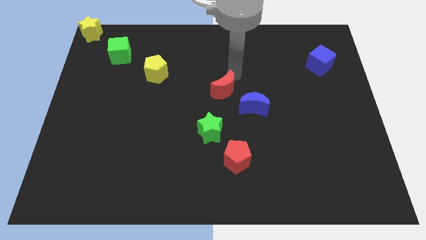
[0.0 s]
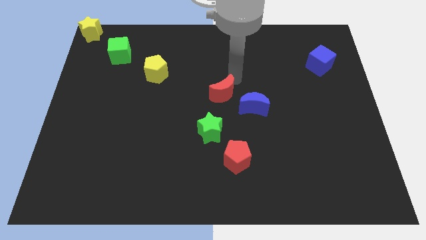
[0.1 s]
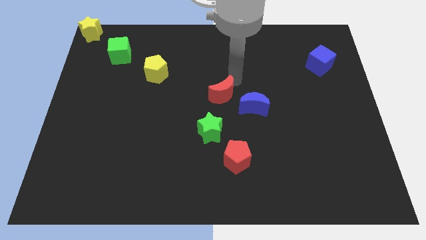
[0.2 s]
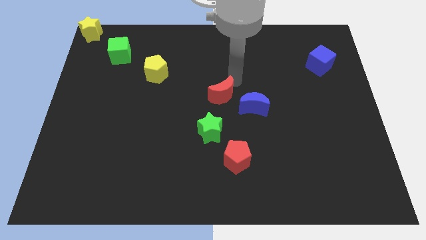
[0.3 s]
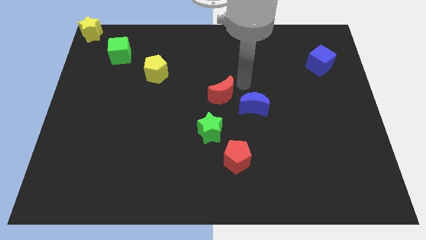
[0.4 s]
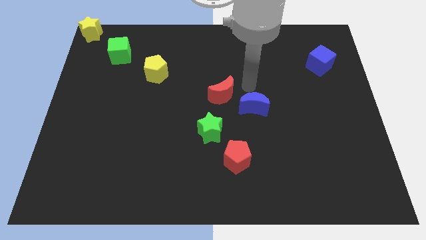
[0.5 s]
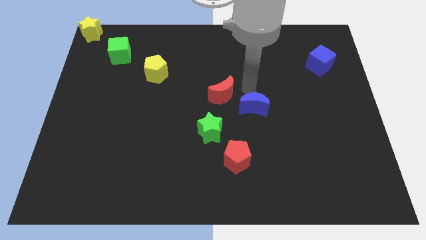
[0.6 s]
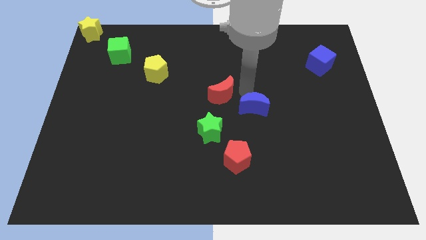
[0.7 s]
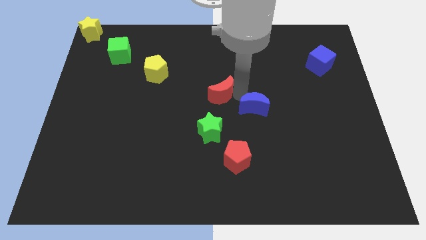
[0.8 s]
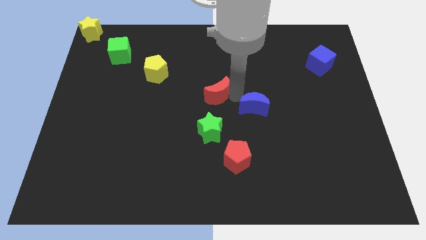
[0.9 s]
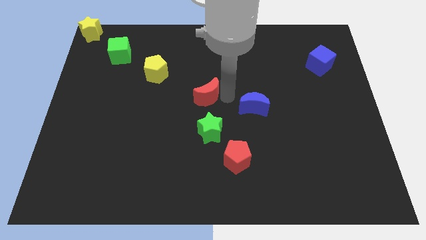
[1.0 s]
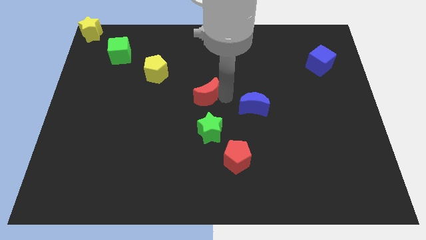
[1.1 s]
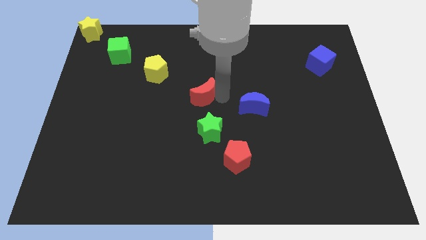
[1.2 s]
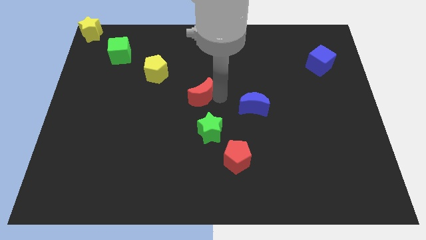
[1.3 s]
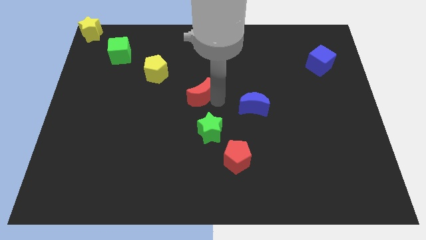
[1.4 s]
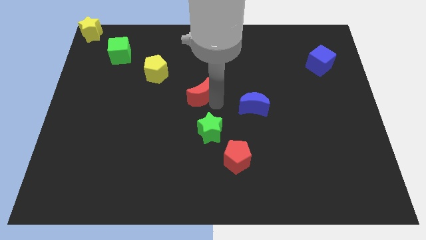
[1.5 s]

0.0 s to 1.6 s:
place red moon to the top of green star

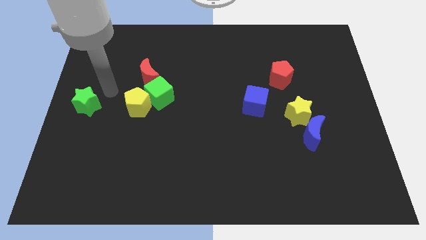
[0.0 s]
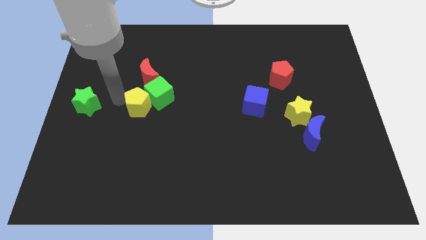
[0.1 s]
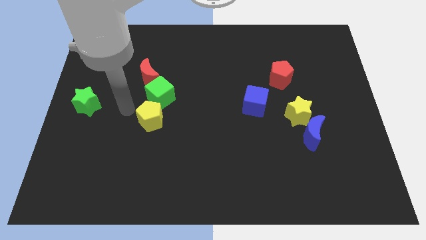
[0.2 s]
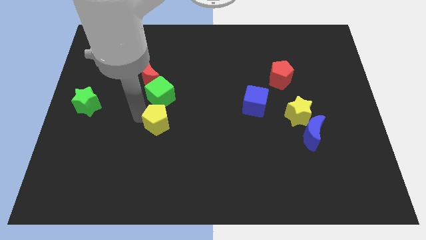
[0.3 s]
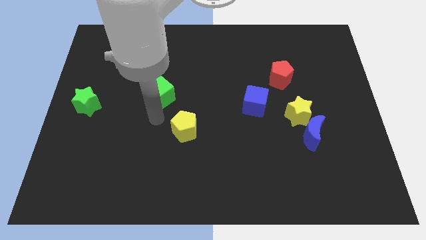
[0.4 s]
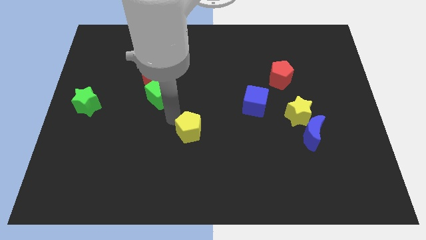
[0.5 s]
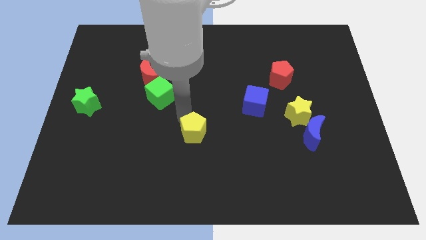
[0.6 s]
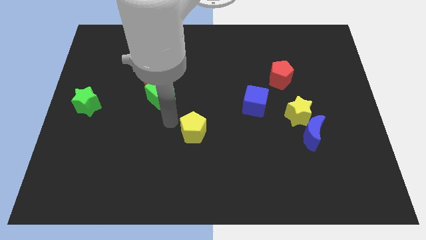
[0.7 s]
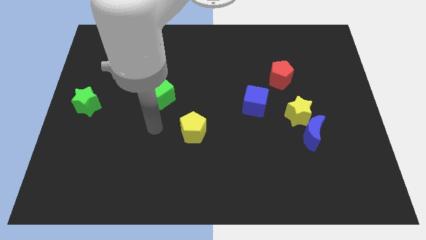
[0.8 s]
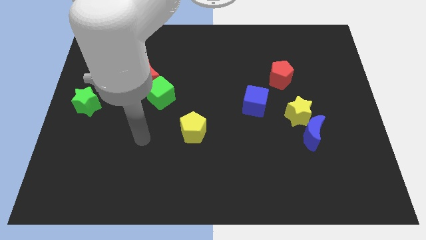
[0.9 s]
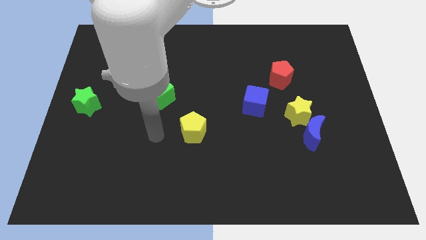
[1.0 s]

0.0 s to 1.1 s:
separate the yellow pentagon from the green cube

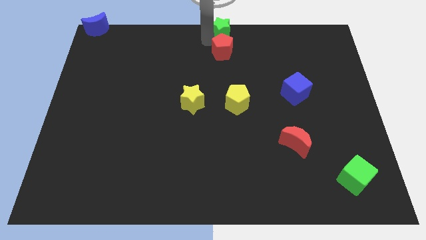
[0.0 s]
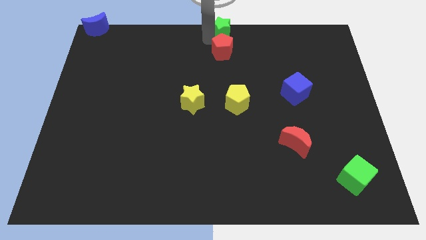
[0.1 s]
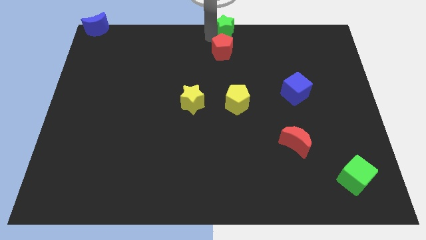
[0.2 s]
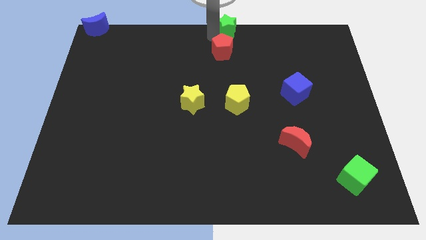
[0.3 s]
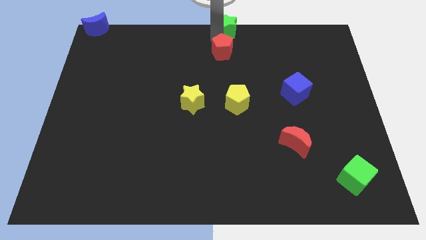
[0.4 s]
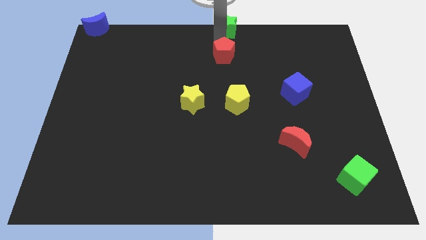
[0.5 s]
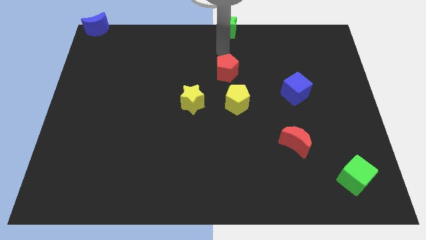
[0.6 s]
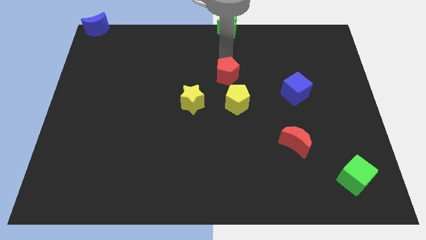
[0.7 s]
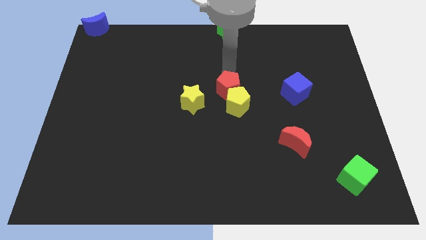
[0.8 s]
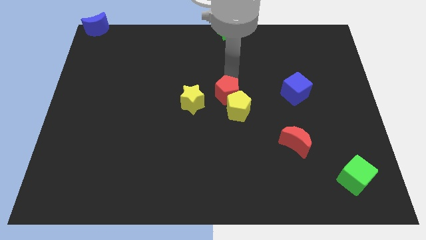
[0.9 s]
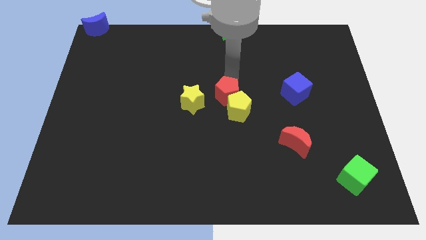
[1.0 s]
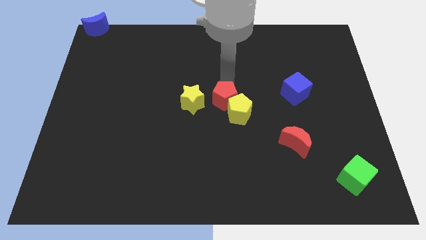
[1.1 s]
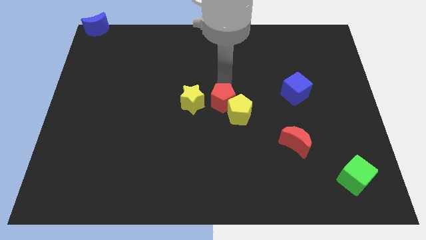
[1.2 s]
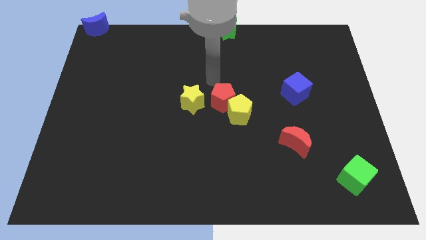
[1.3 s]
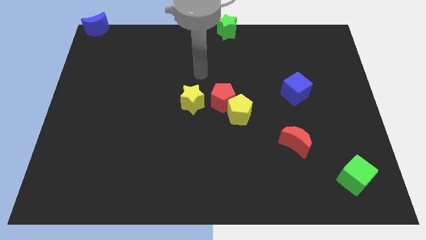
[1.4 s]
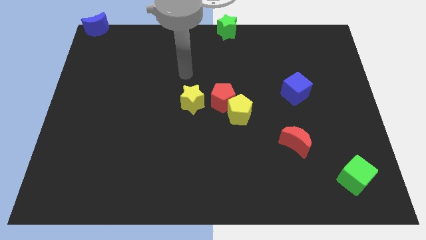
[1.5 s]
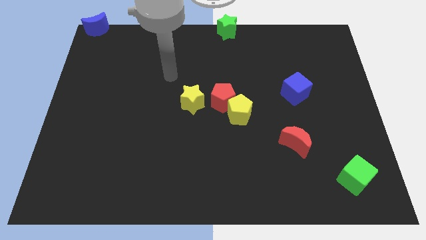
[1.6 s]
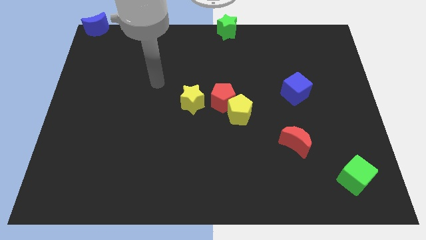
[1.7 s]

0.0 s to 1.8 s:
push the red pentagon into yellow pentagon on top

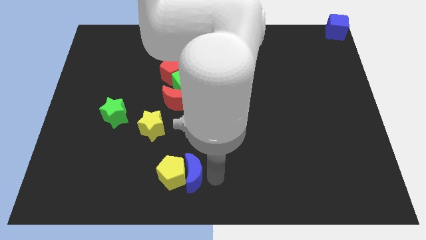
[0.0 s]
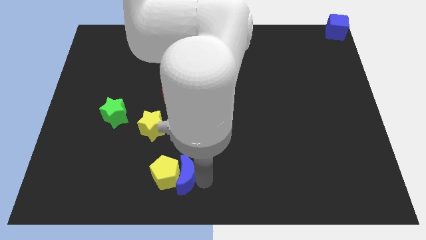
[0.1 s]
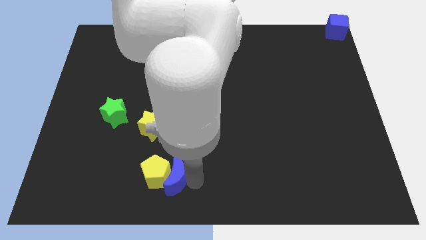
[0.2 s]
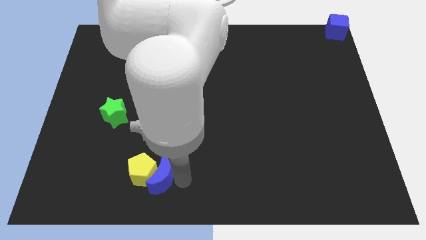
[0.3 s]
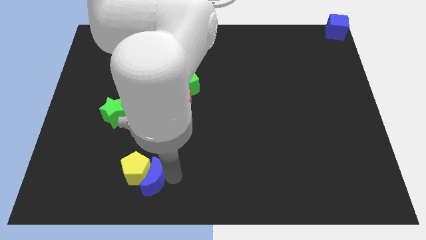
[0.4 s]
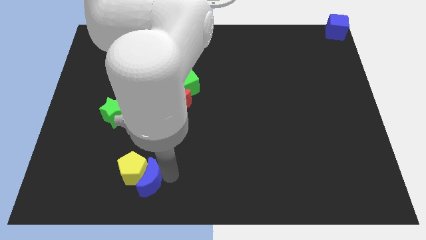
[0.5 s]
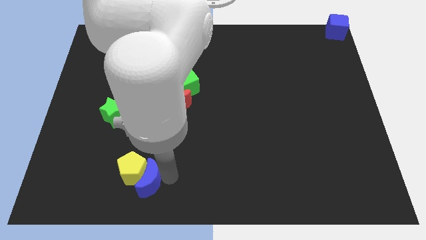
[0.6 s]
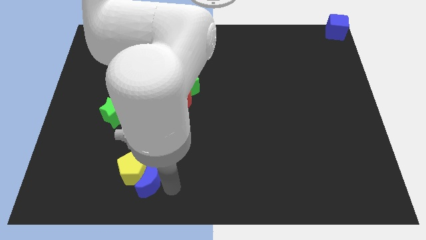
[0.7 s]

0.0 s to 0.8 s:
push the blue moon and yellow pentagon towards the left side of the board

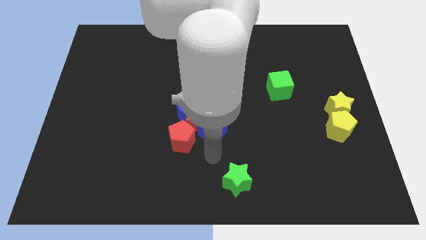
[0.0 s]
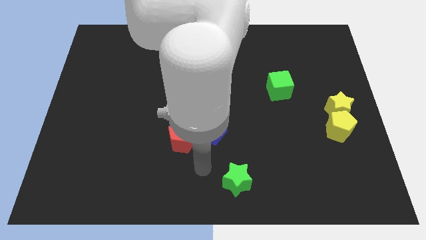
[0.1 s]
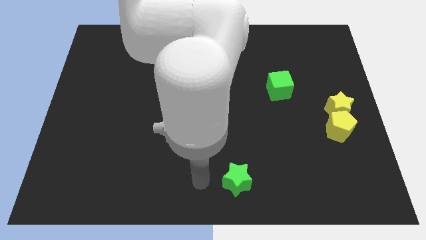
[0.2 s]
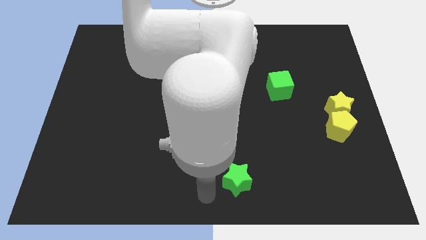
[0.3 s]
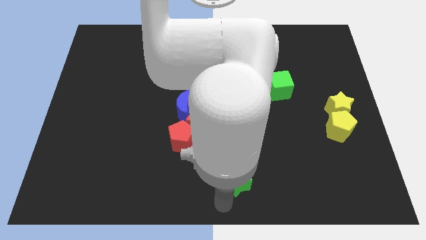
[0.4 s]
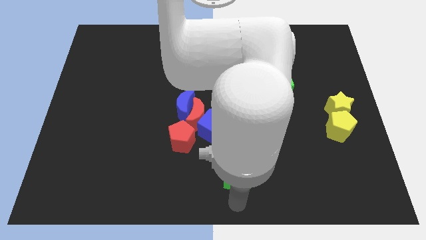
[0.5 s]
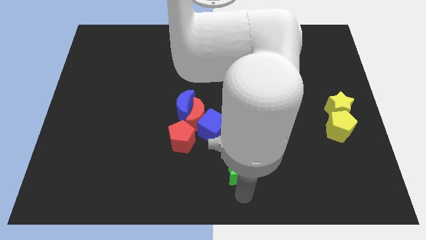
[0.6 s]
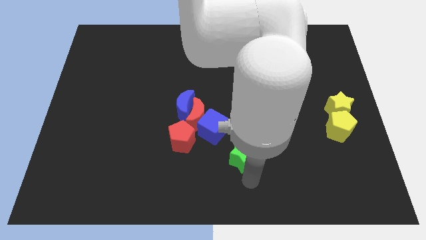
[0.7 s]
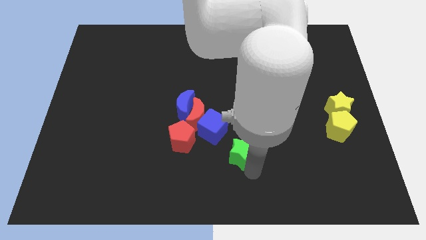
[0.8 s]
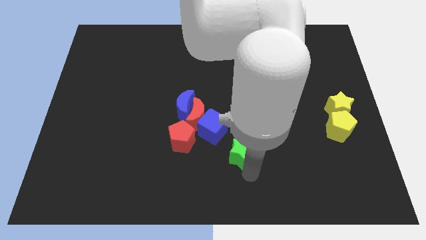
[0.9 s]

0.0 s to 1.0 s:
move the green star towards the blue cube

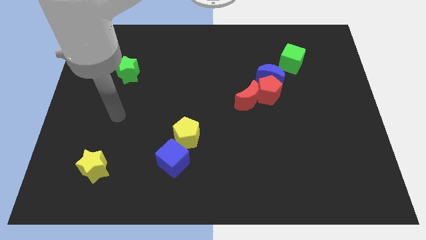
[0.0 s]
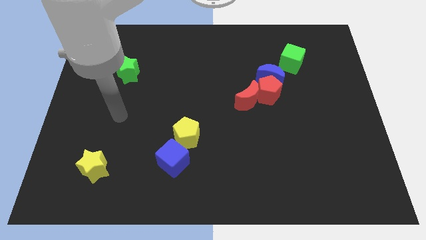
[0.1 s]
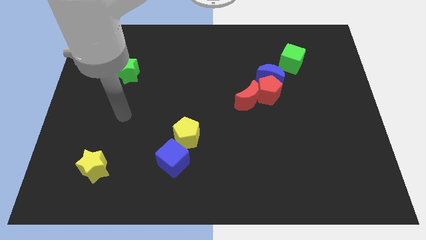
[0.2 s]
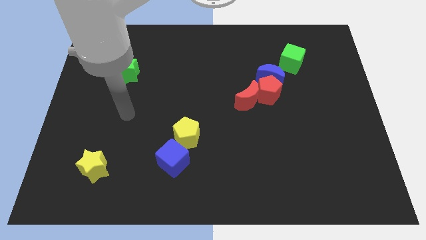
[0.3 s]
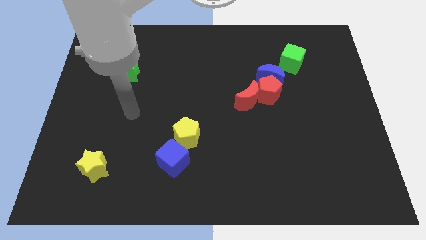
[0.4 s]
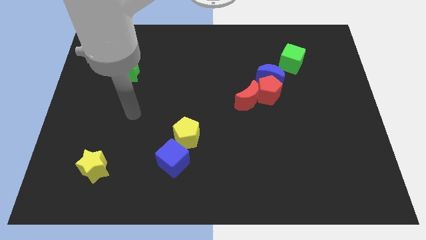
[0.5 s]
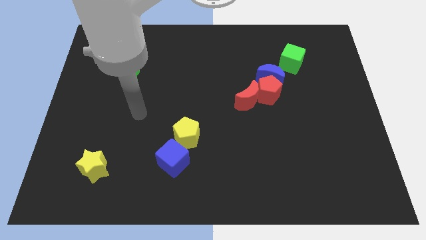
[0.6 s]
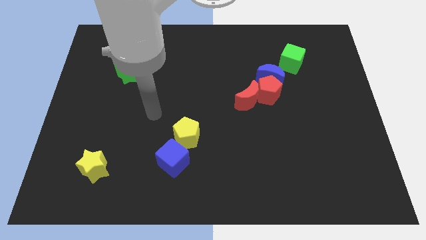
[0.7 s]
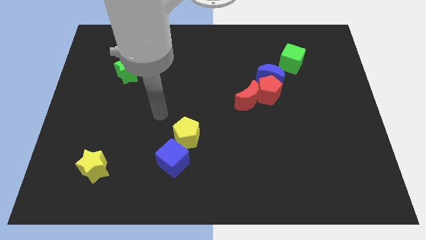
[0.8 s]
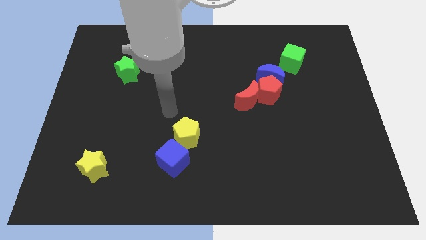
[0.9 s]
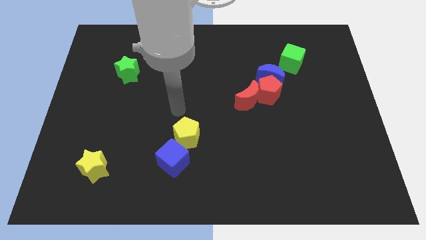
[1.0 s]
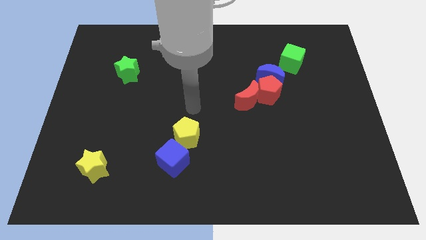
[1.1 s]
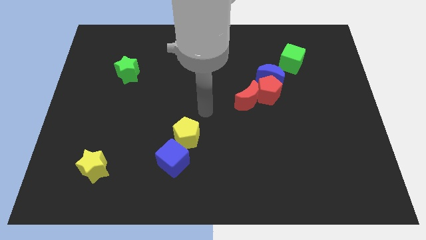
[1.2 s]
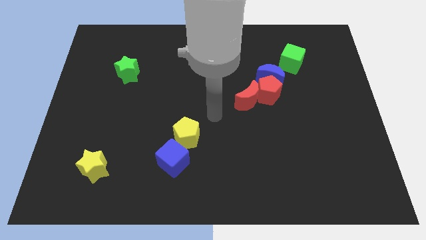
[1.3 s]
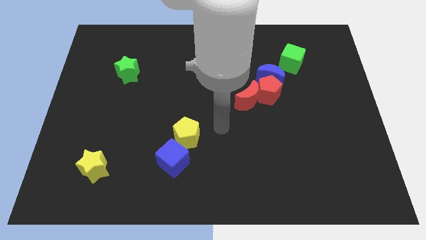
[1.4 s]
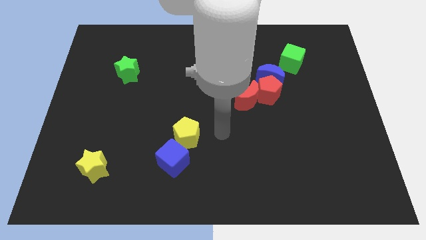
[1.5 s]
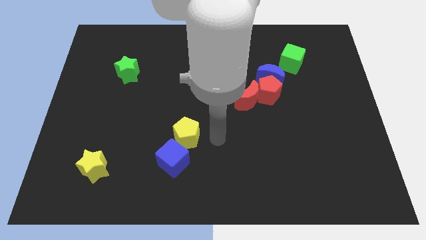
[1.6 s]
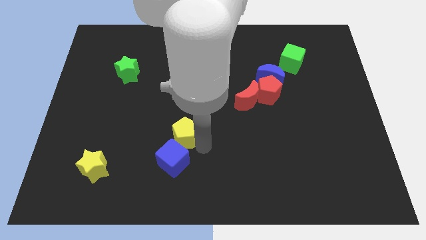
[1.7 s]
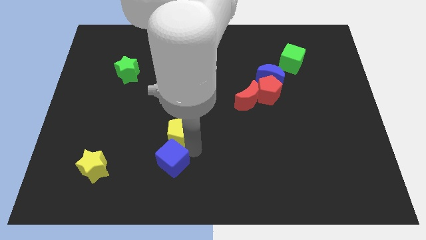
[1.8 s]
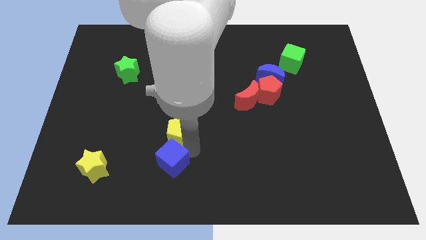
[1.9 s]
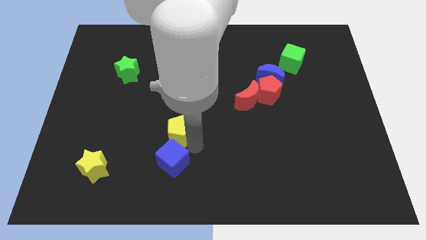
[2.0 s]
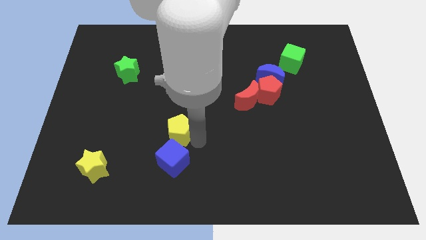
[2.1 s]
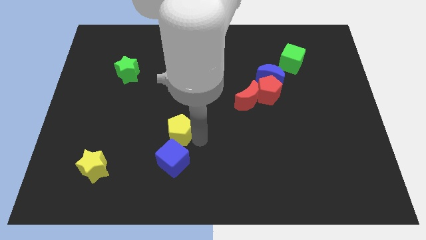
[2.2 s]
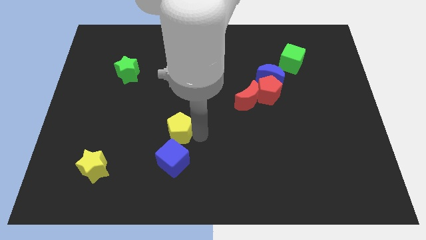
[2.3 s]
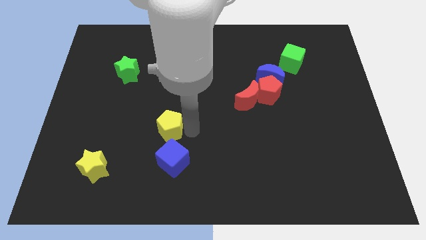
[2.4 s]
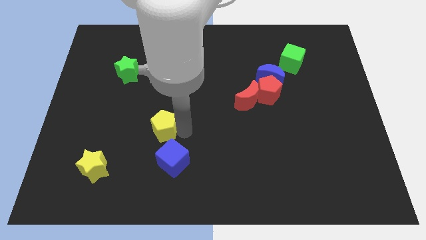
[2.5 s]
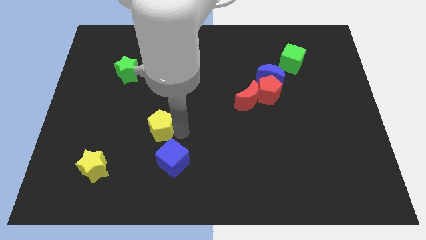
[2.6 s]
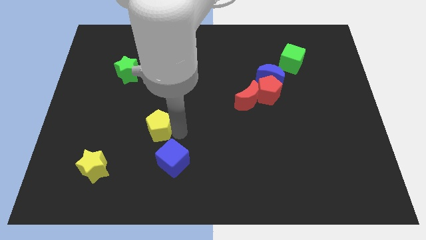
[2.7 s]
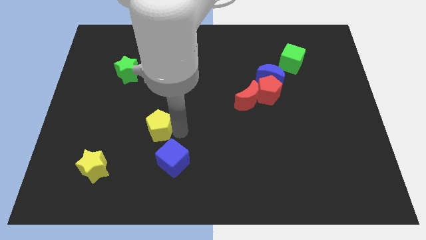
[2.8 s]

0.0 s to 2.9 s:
separate the yellow pentagon from the blue cube
